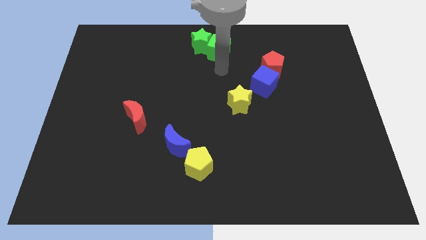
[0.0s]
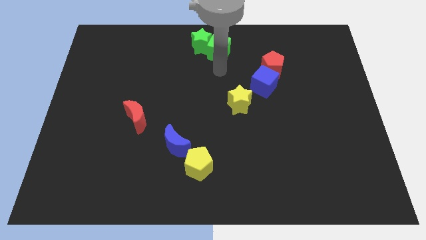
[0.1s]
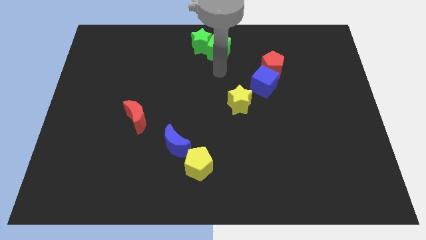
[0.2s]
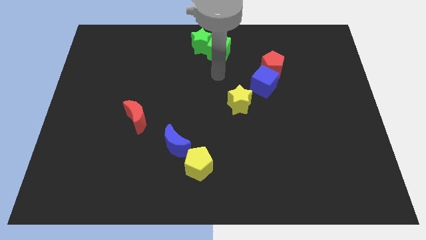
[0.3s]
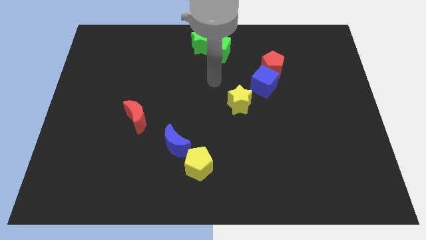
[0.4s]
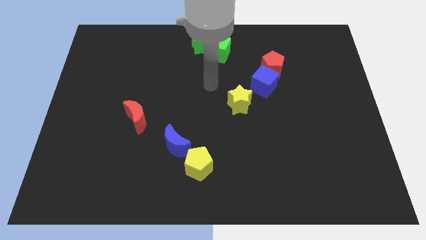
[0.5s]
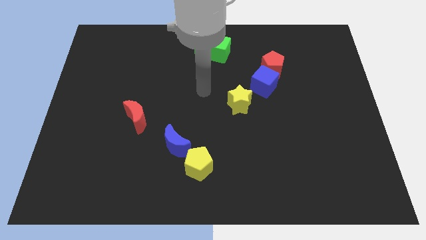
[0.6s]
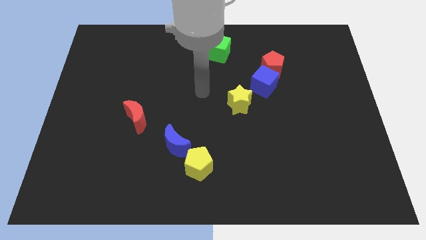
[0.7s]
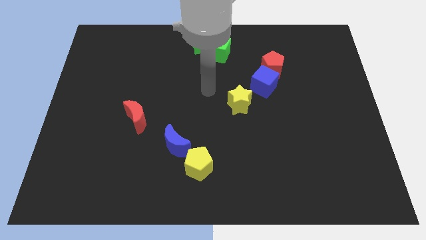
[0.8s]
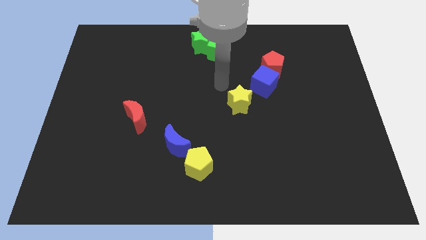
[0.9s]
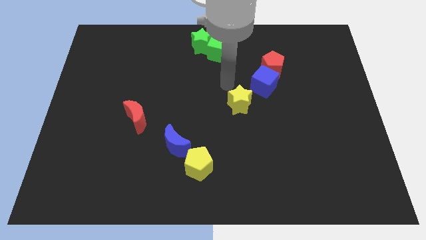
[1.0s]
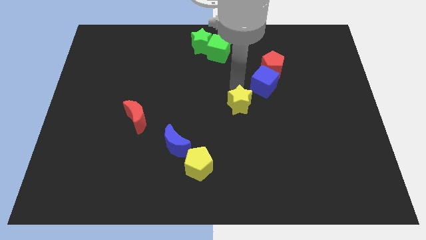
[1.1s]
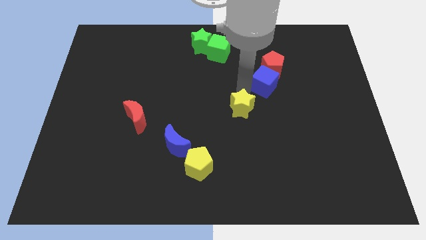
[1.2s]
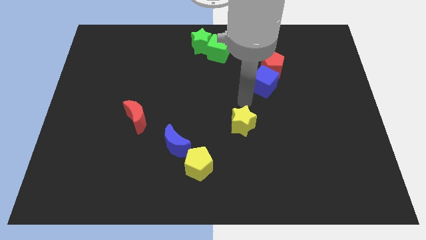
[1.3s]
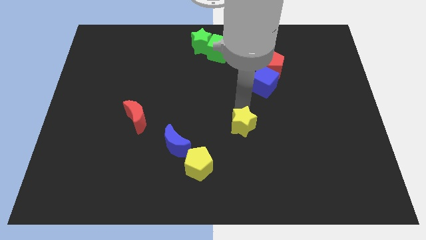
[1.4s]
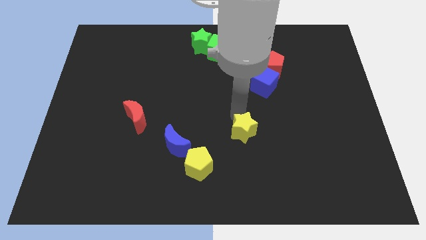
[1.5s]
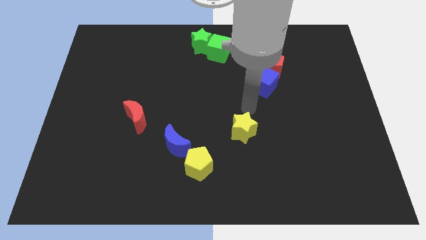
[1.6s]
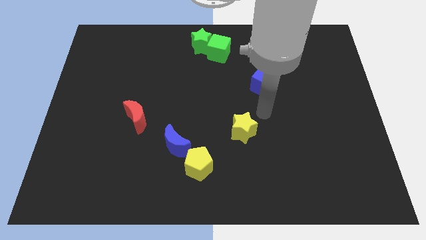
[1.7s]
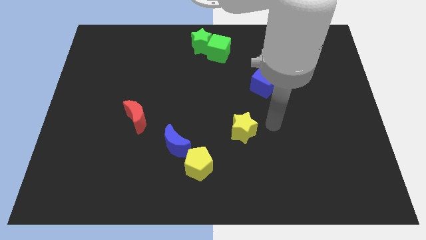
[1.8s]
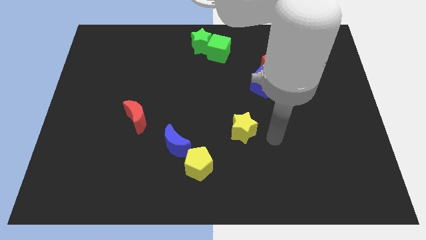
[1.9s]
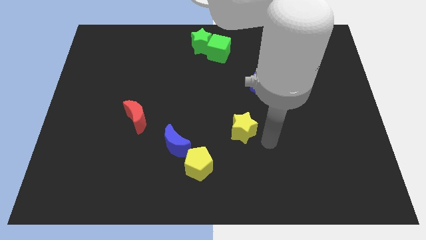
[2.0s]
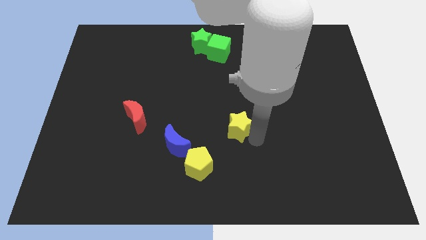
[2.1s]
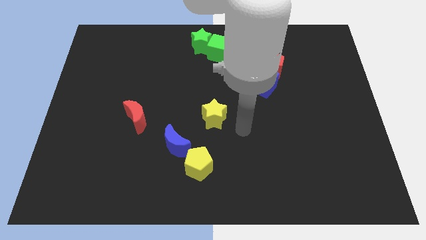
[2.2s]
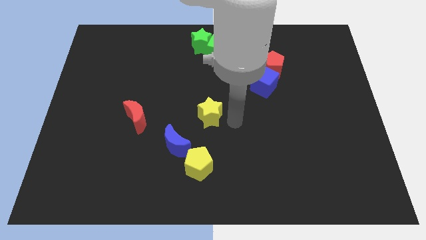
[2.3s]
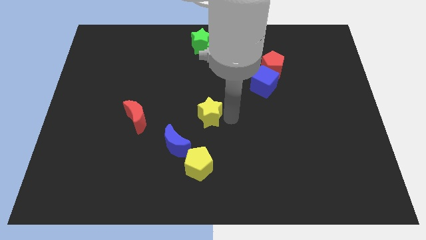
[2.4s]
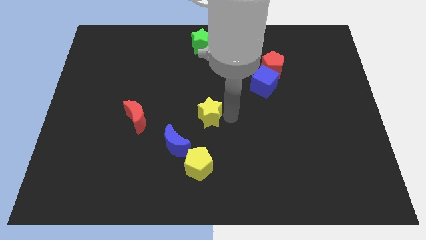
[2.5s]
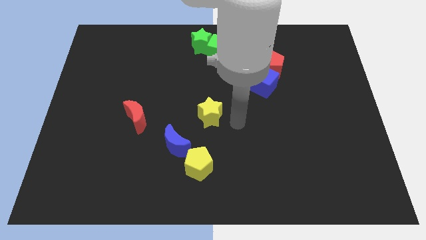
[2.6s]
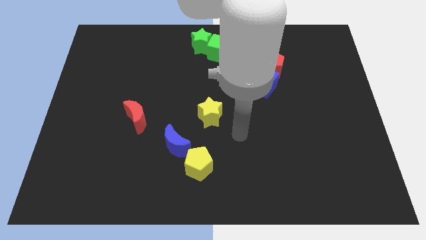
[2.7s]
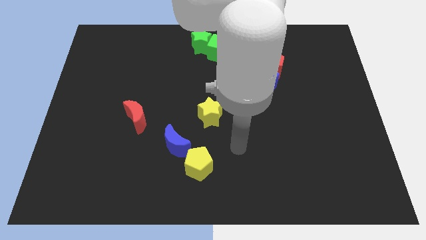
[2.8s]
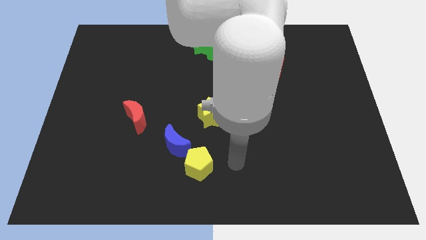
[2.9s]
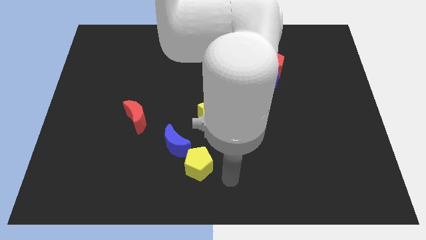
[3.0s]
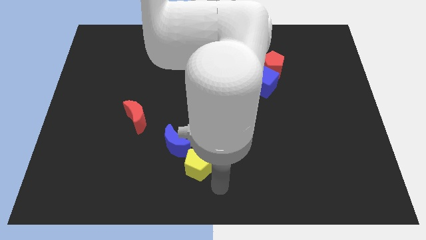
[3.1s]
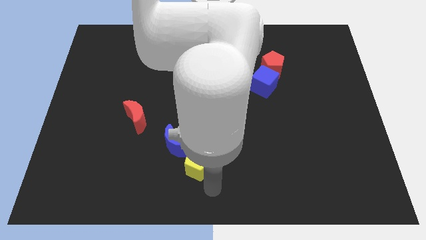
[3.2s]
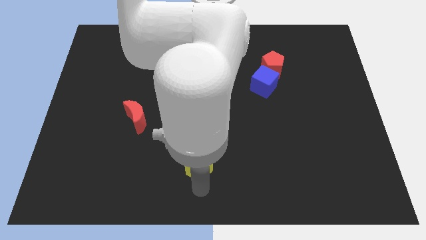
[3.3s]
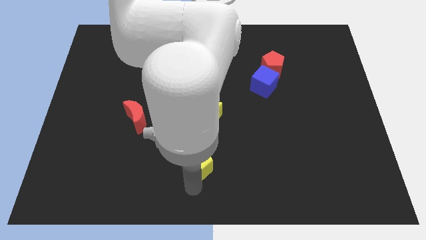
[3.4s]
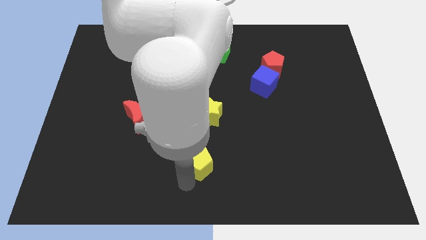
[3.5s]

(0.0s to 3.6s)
push the yellow star to the center of the board

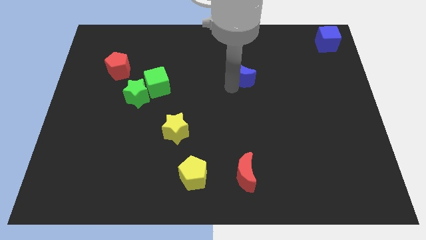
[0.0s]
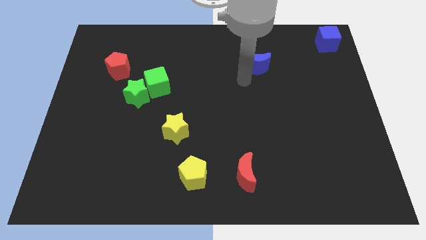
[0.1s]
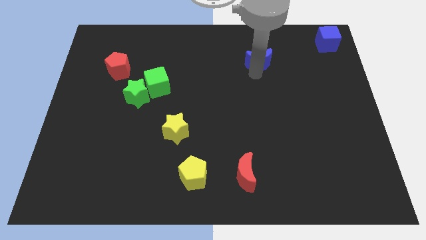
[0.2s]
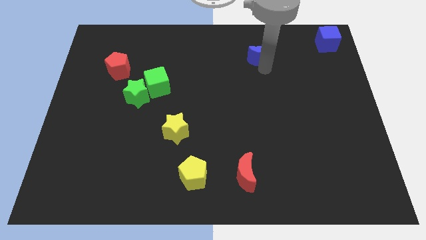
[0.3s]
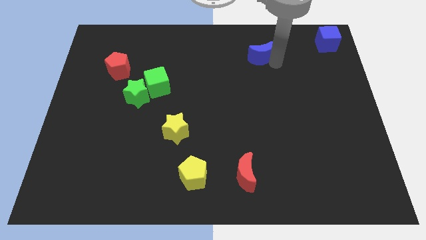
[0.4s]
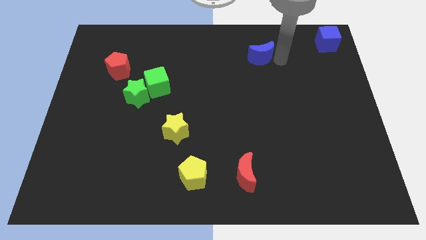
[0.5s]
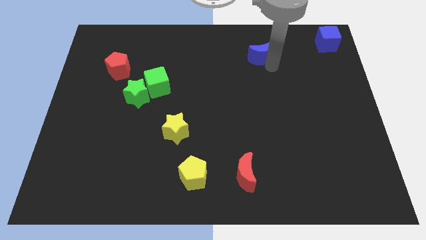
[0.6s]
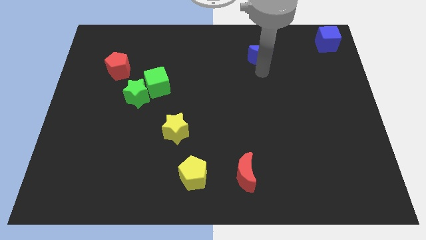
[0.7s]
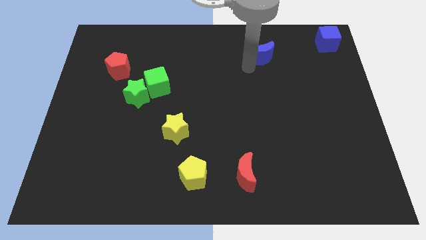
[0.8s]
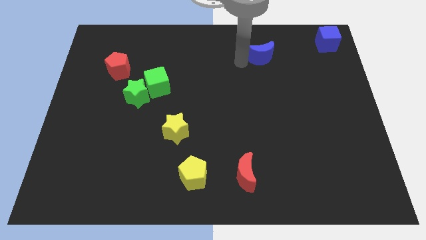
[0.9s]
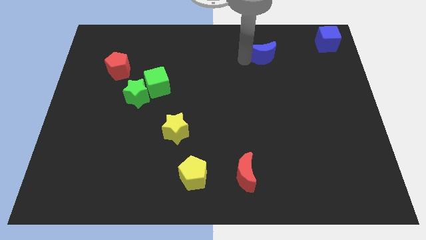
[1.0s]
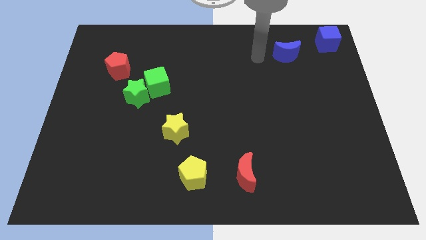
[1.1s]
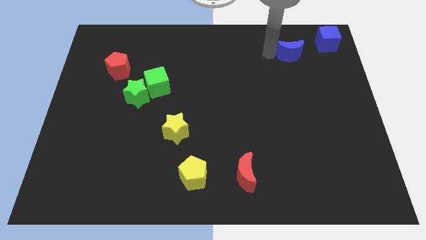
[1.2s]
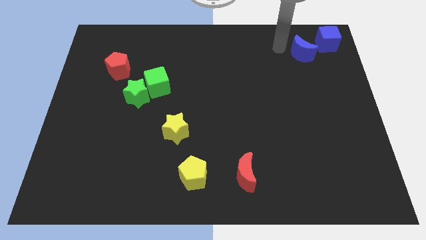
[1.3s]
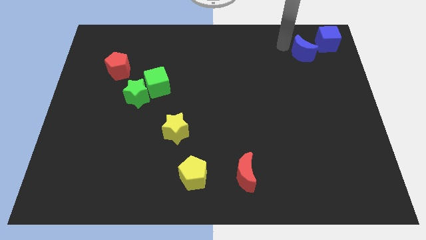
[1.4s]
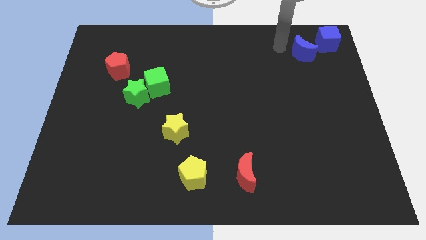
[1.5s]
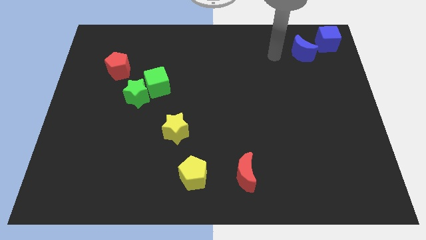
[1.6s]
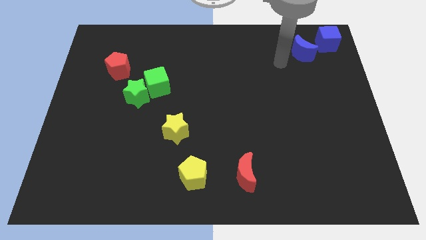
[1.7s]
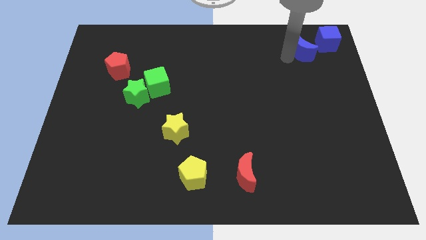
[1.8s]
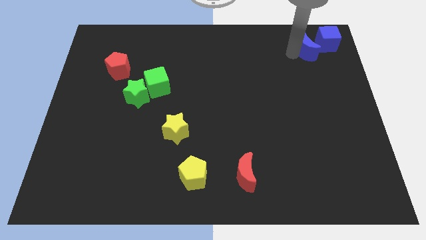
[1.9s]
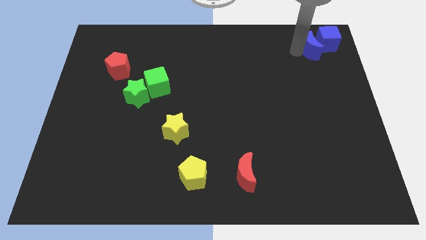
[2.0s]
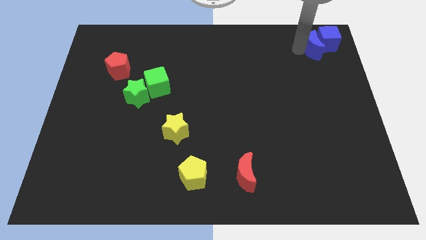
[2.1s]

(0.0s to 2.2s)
place blue crescent beside blue cube

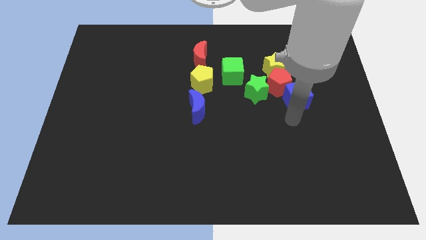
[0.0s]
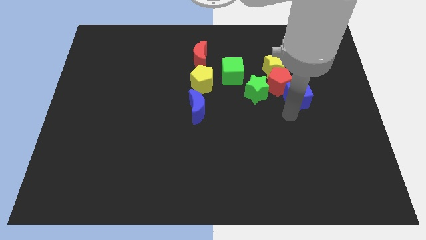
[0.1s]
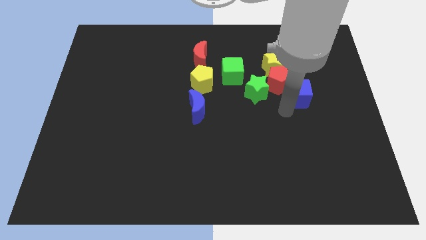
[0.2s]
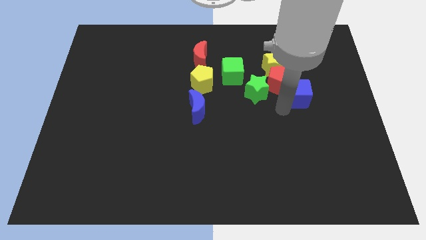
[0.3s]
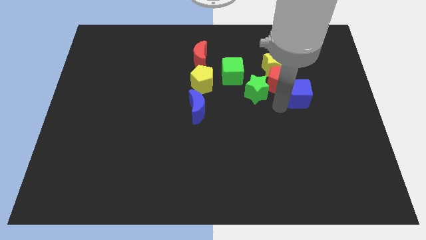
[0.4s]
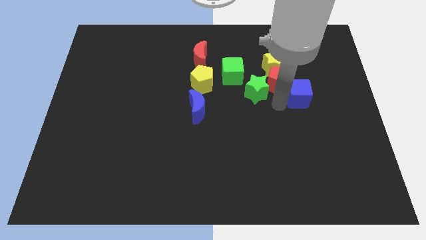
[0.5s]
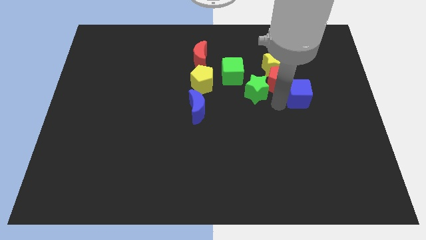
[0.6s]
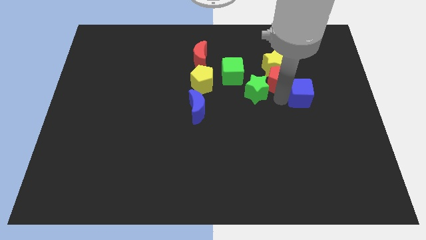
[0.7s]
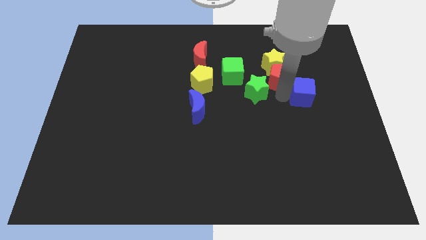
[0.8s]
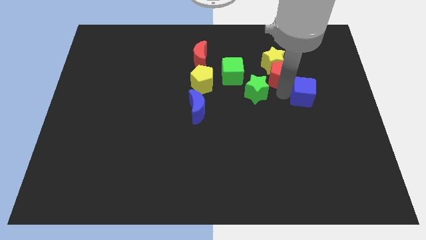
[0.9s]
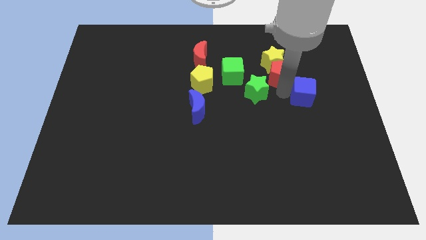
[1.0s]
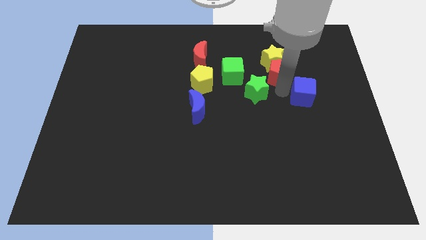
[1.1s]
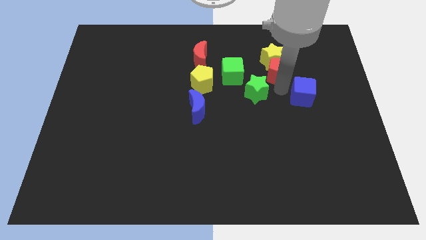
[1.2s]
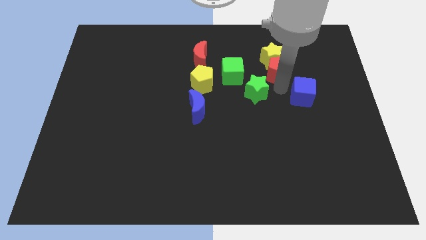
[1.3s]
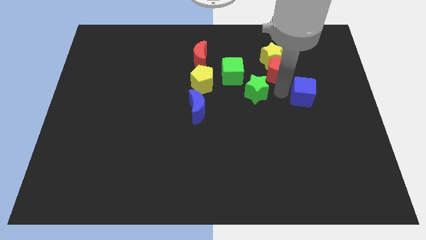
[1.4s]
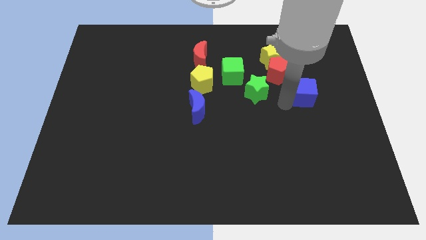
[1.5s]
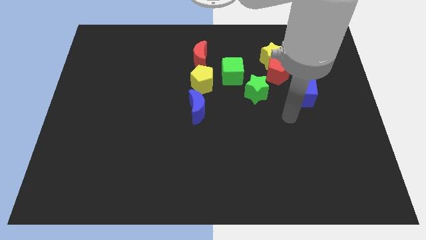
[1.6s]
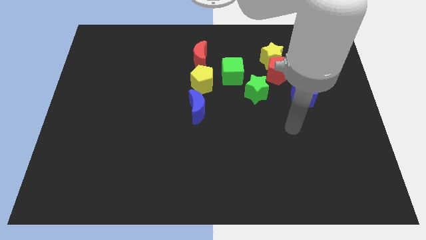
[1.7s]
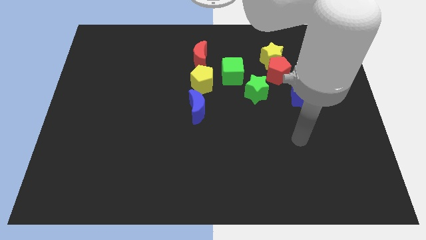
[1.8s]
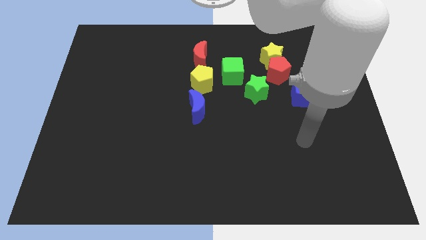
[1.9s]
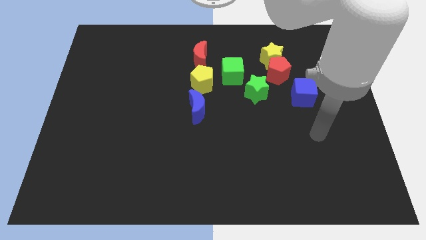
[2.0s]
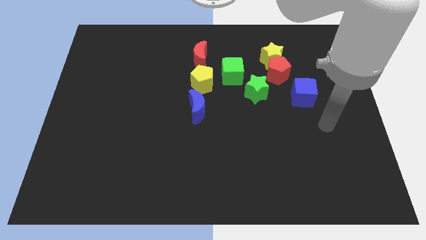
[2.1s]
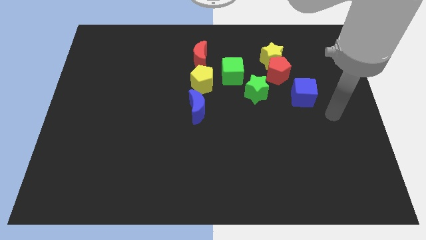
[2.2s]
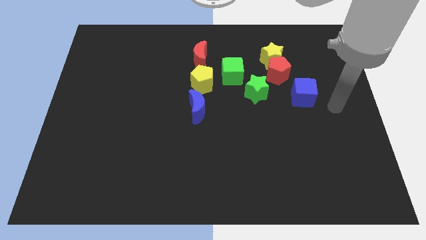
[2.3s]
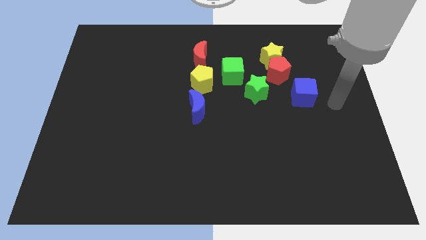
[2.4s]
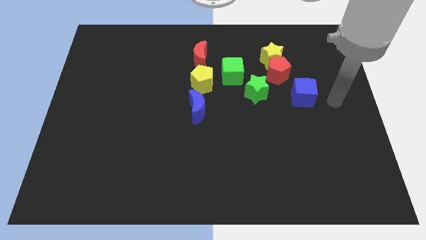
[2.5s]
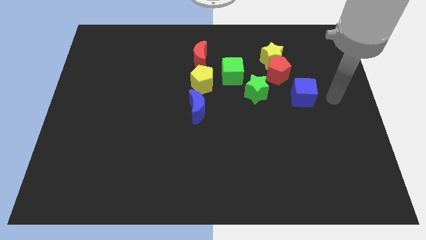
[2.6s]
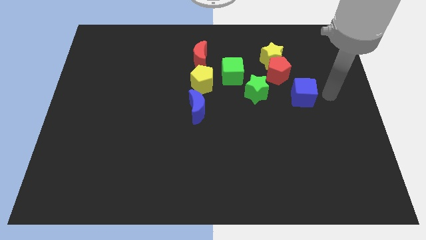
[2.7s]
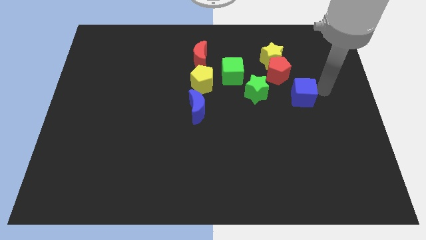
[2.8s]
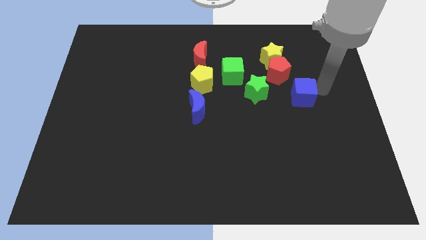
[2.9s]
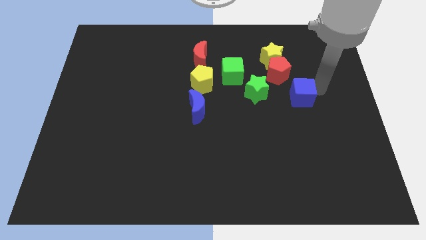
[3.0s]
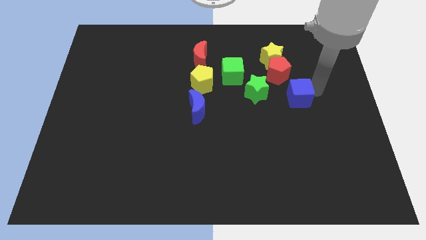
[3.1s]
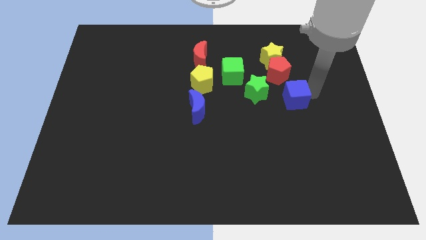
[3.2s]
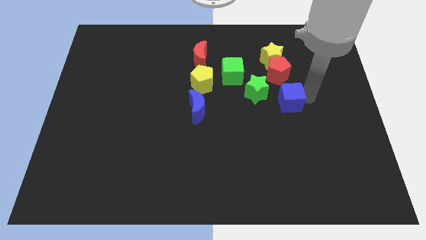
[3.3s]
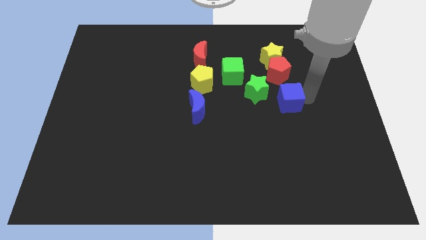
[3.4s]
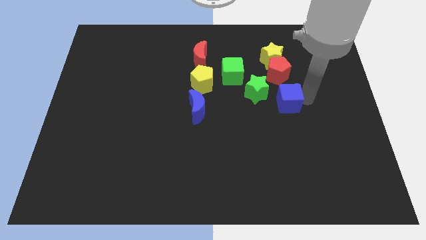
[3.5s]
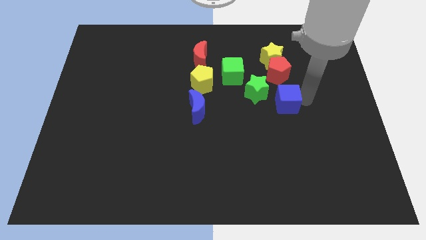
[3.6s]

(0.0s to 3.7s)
place the blue cube down to the red pentagon
